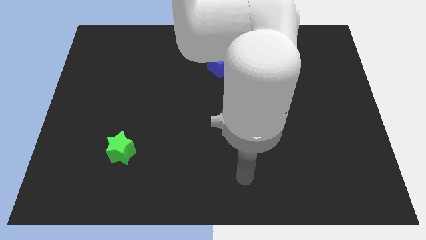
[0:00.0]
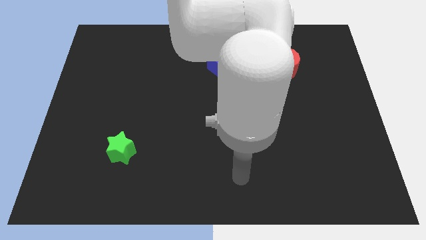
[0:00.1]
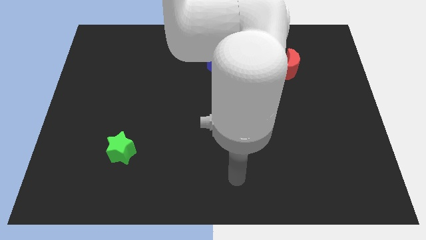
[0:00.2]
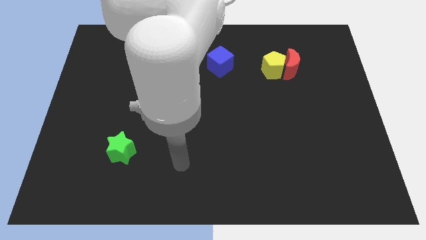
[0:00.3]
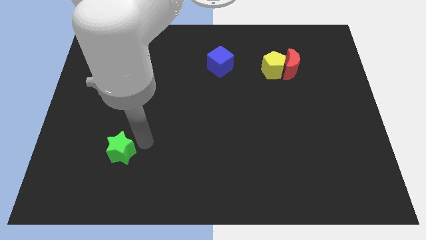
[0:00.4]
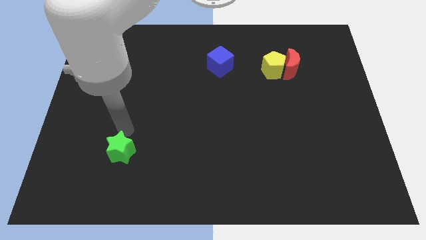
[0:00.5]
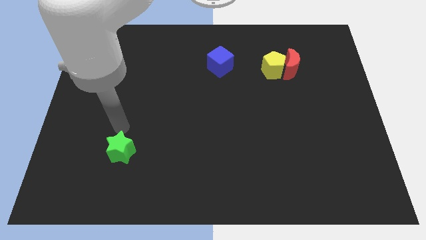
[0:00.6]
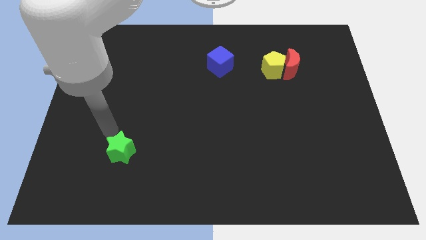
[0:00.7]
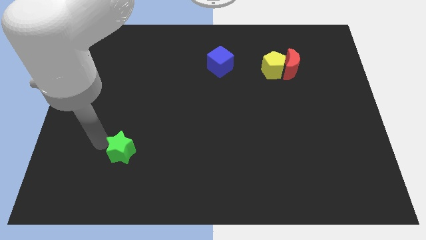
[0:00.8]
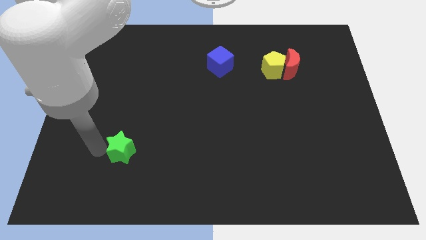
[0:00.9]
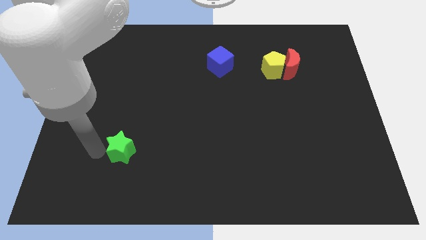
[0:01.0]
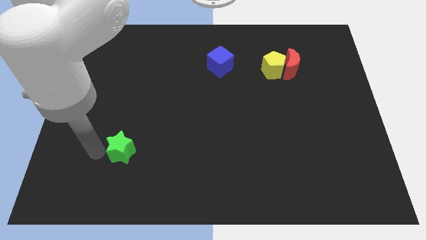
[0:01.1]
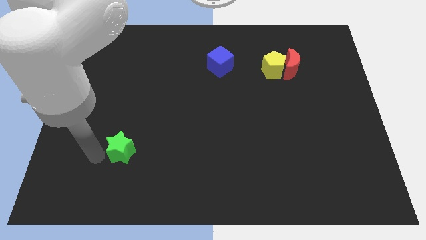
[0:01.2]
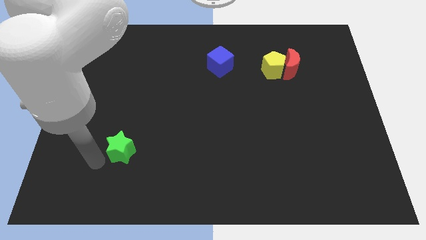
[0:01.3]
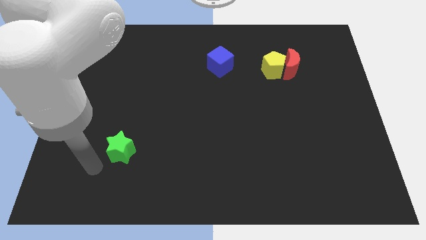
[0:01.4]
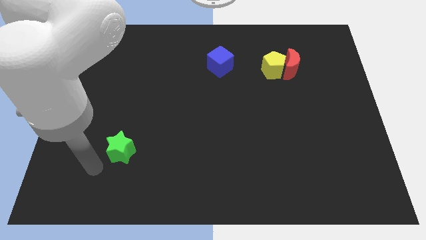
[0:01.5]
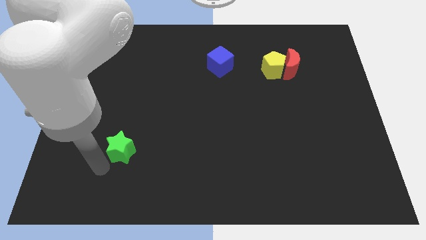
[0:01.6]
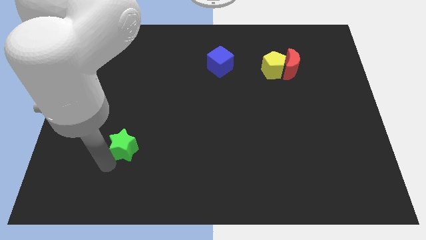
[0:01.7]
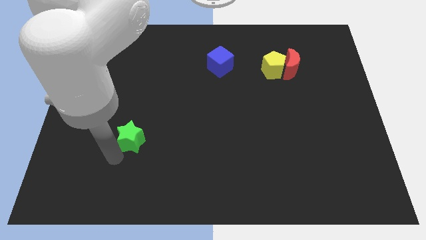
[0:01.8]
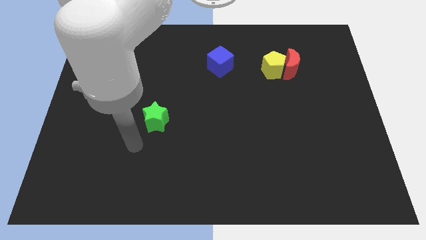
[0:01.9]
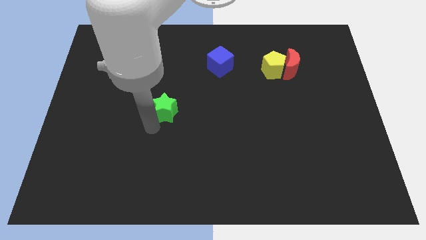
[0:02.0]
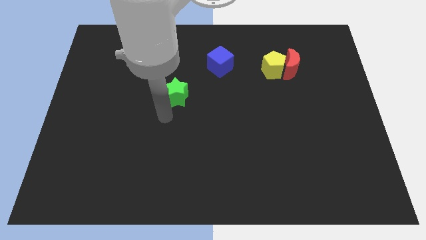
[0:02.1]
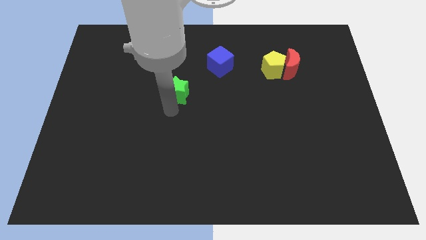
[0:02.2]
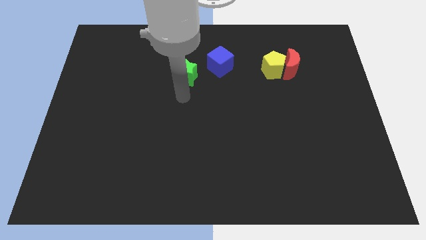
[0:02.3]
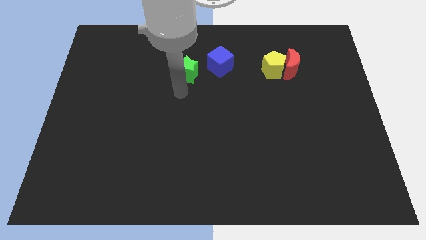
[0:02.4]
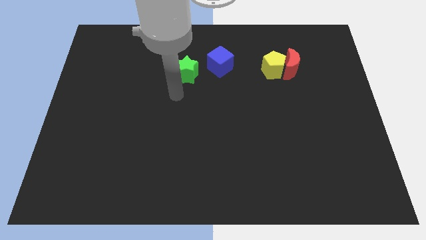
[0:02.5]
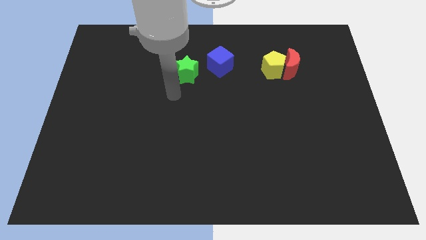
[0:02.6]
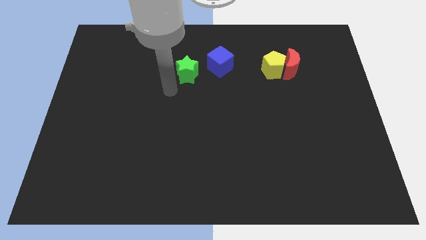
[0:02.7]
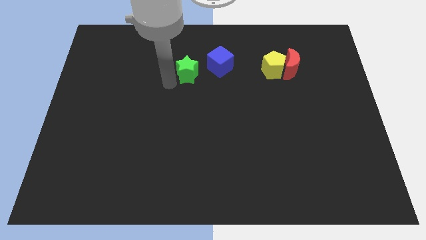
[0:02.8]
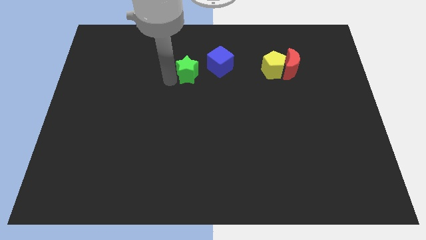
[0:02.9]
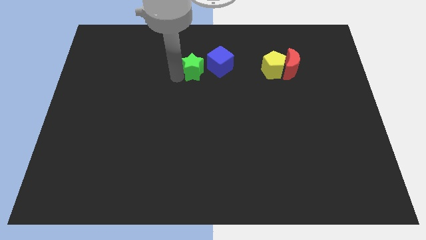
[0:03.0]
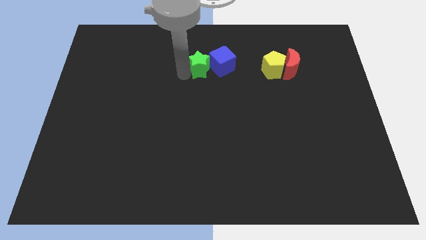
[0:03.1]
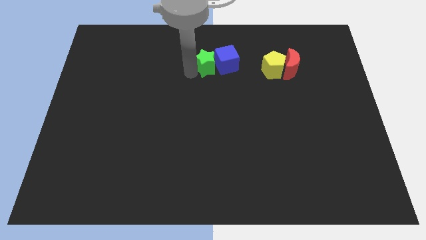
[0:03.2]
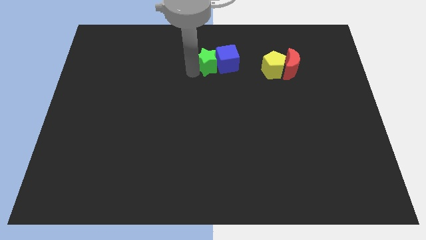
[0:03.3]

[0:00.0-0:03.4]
put the green block to the cube

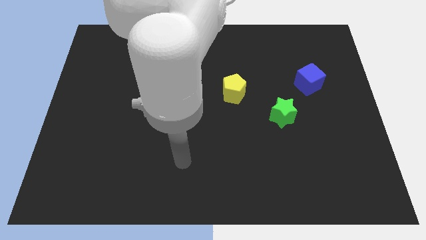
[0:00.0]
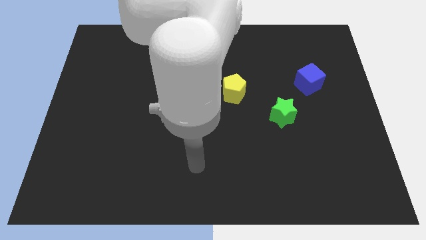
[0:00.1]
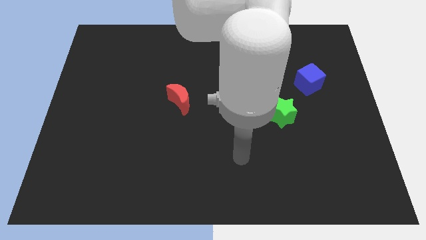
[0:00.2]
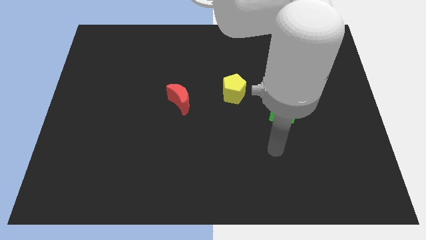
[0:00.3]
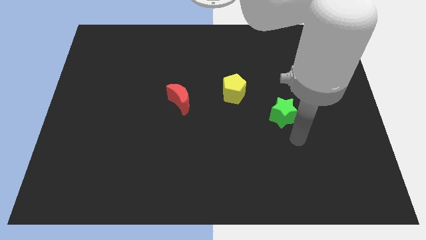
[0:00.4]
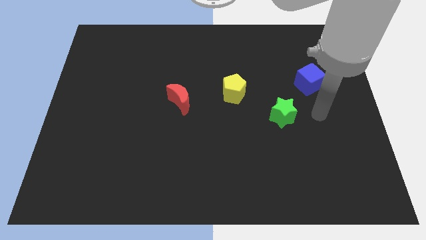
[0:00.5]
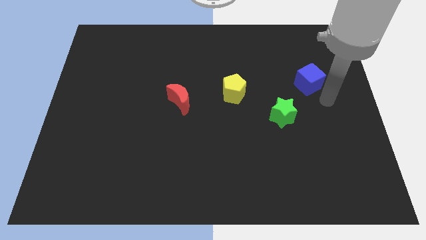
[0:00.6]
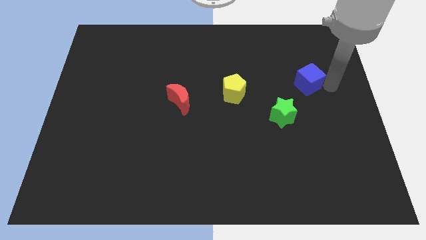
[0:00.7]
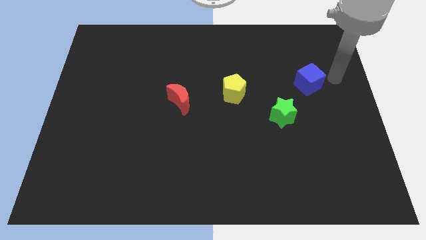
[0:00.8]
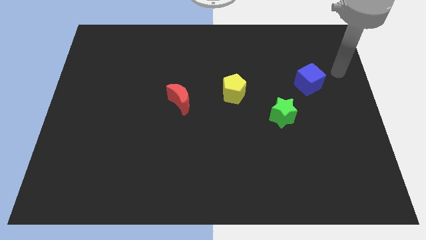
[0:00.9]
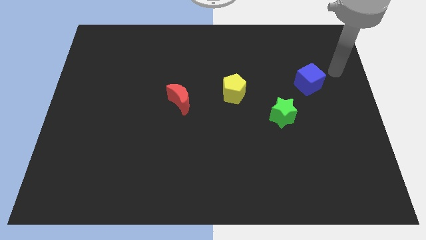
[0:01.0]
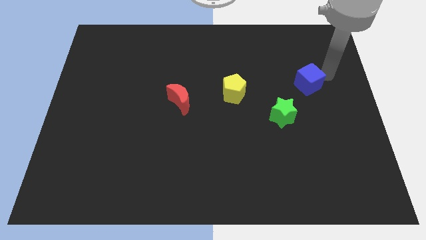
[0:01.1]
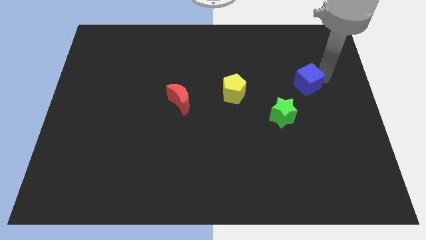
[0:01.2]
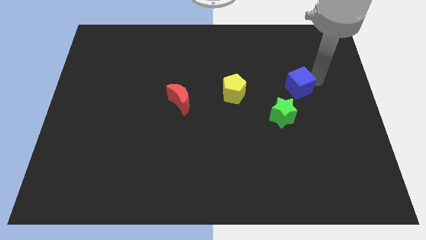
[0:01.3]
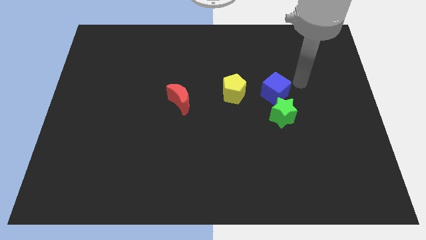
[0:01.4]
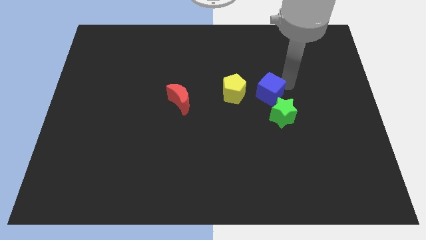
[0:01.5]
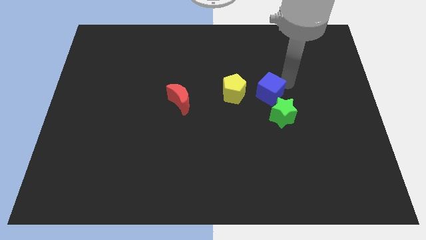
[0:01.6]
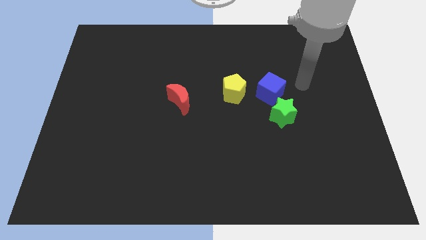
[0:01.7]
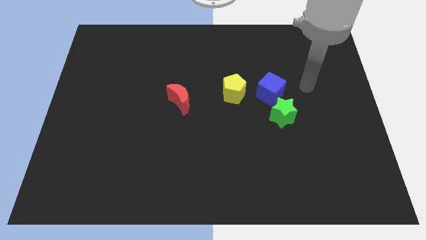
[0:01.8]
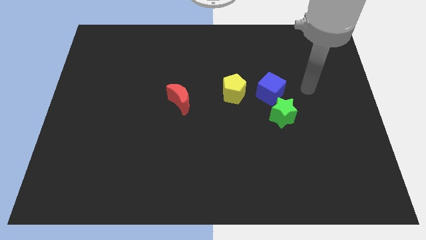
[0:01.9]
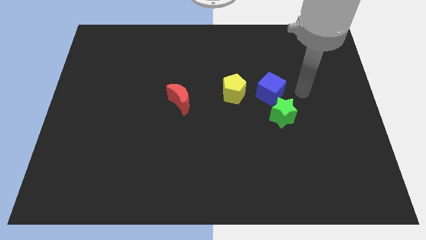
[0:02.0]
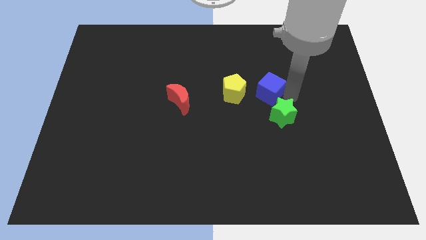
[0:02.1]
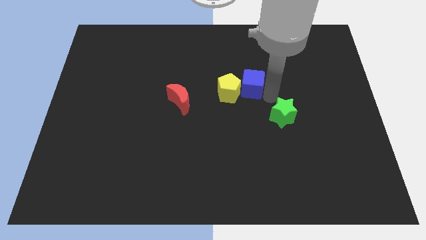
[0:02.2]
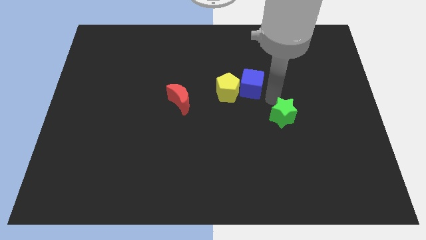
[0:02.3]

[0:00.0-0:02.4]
push the cube to the yellow block

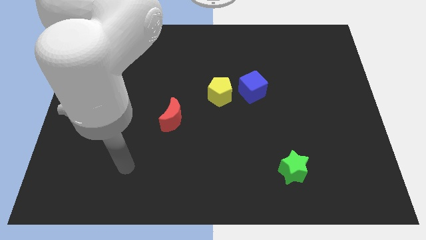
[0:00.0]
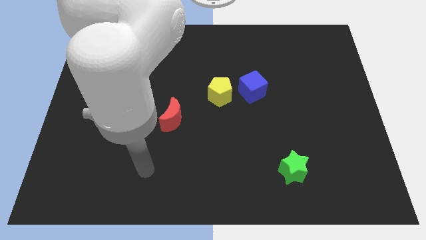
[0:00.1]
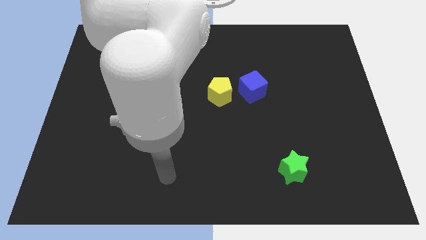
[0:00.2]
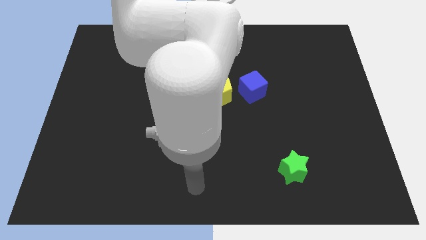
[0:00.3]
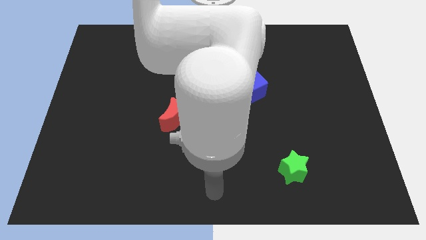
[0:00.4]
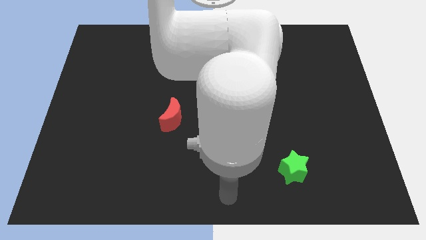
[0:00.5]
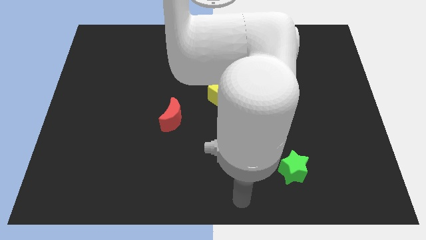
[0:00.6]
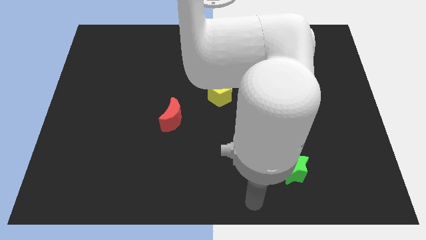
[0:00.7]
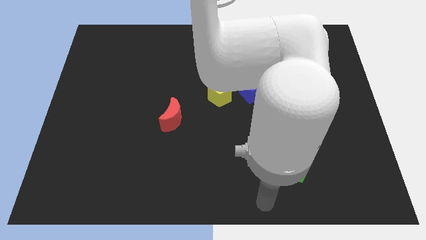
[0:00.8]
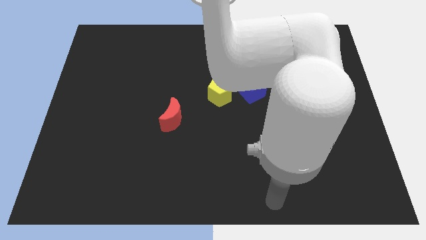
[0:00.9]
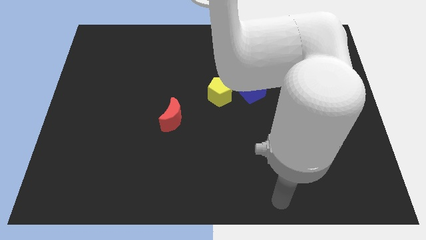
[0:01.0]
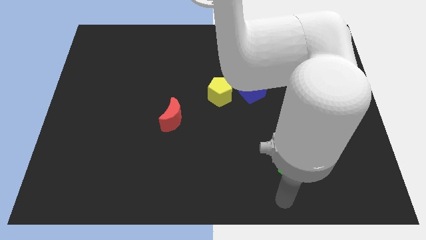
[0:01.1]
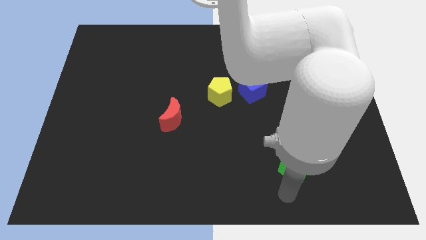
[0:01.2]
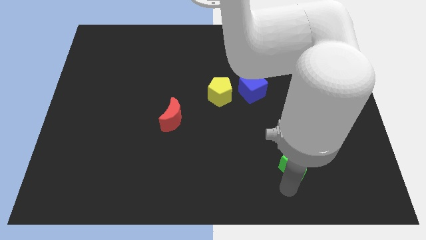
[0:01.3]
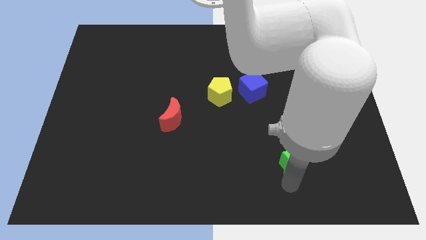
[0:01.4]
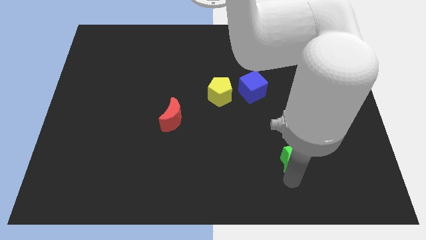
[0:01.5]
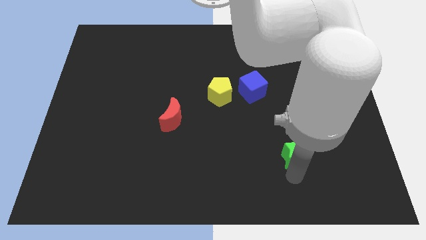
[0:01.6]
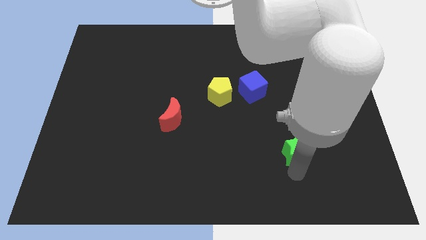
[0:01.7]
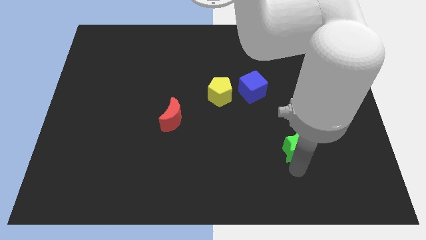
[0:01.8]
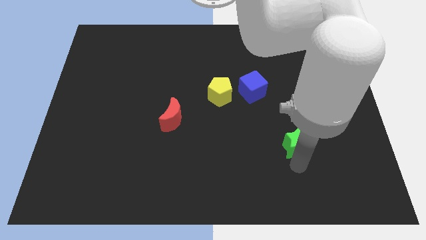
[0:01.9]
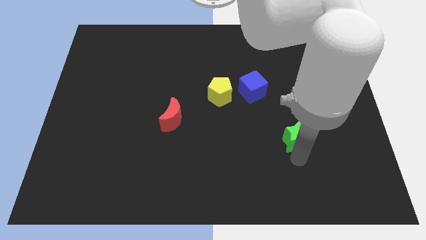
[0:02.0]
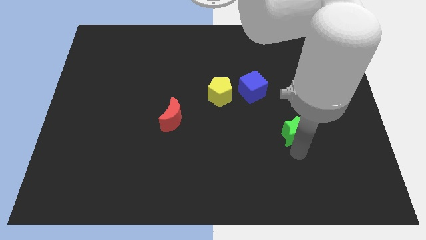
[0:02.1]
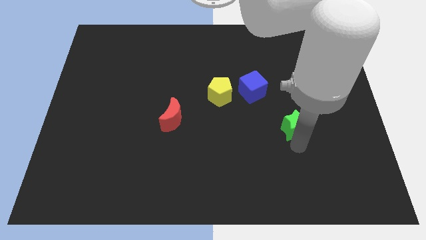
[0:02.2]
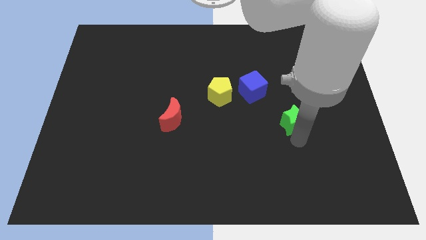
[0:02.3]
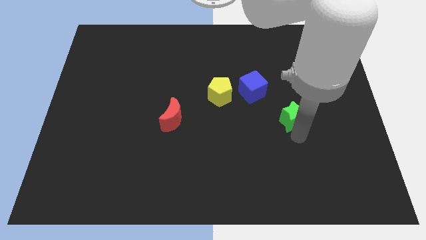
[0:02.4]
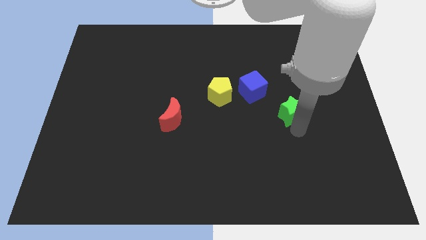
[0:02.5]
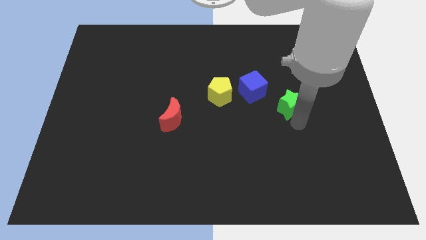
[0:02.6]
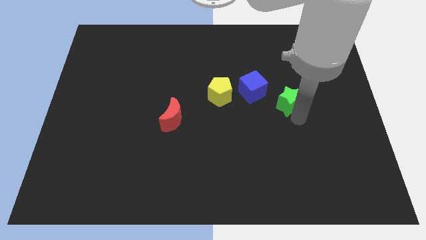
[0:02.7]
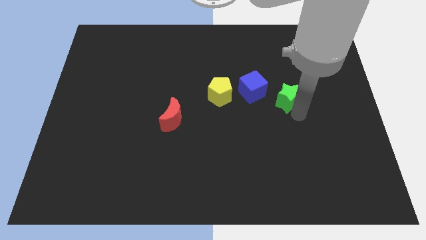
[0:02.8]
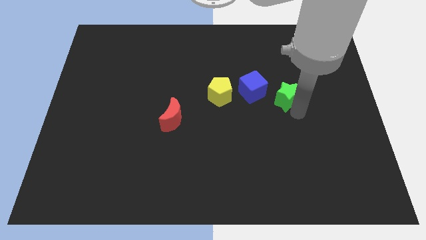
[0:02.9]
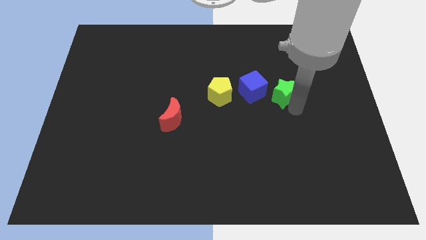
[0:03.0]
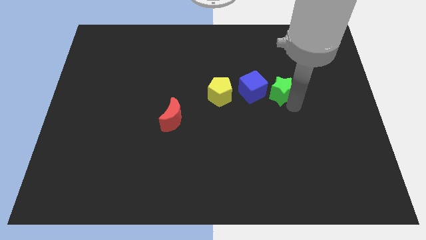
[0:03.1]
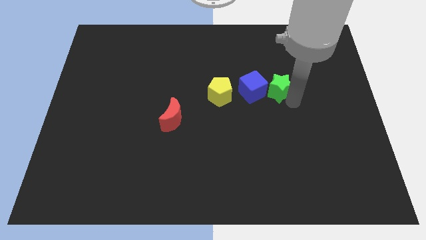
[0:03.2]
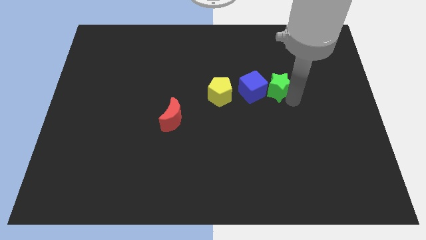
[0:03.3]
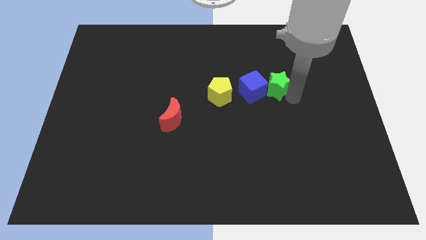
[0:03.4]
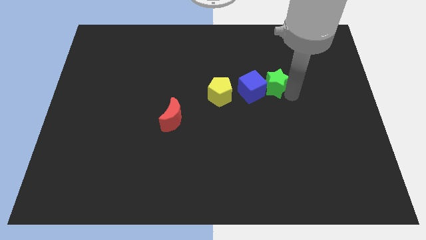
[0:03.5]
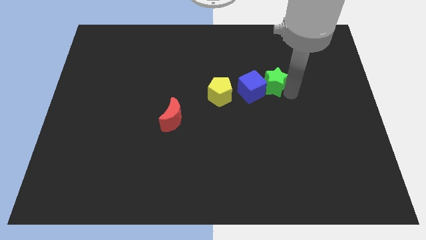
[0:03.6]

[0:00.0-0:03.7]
push the star to the cube
